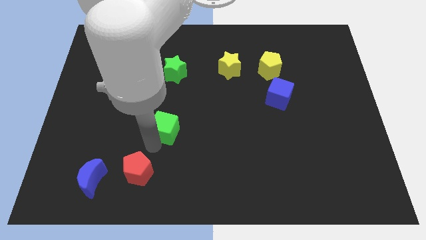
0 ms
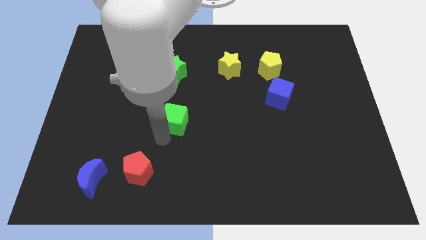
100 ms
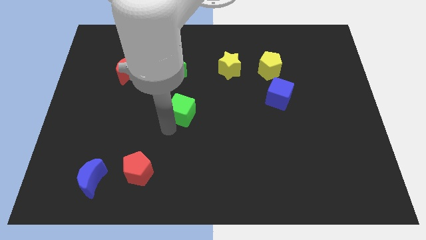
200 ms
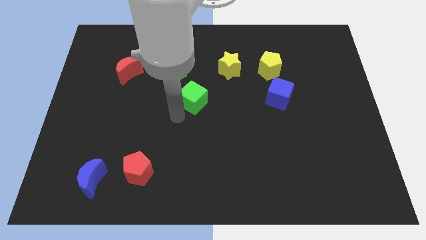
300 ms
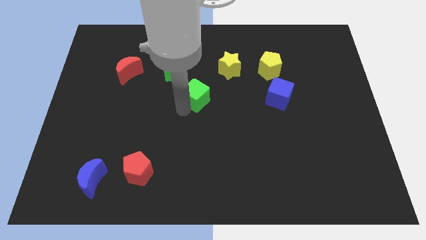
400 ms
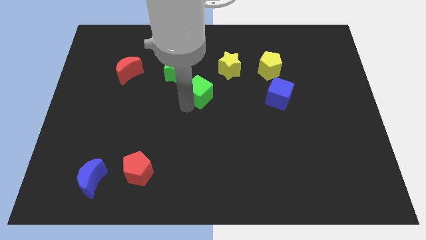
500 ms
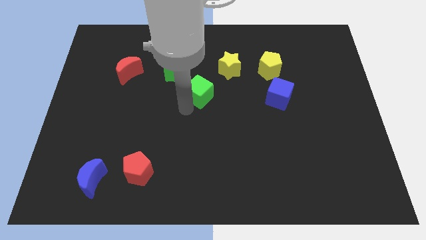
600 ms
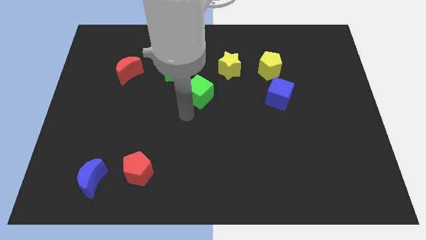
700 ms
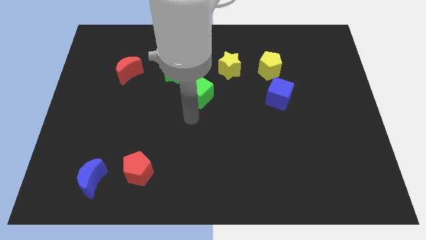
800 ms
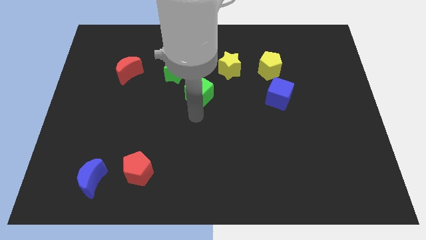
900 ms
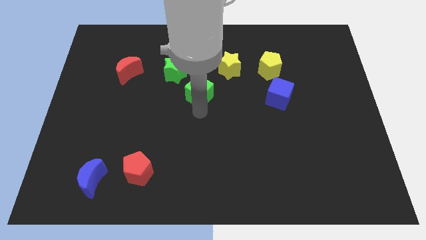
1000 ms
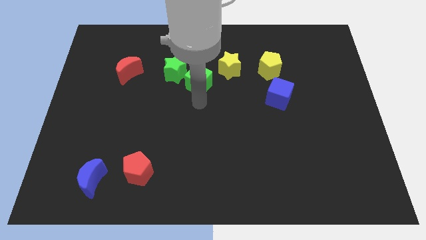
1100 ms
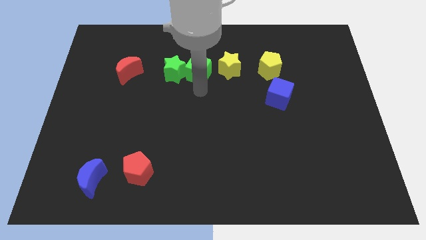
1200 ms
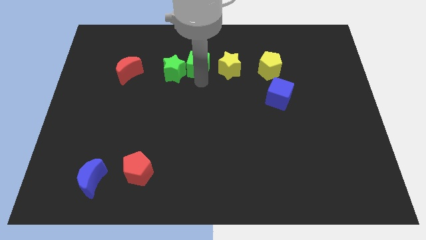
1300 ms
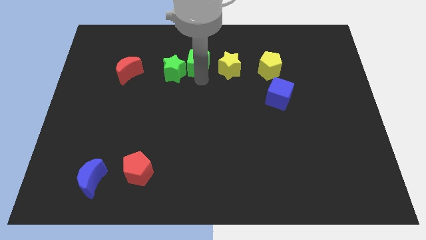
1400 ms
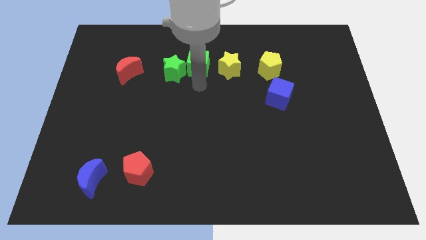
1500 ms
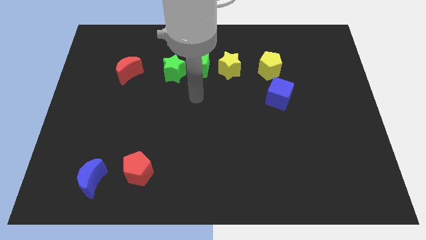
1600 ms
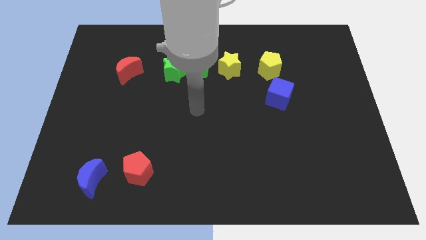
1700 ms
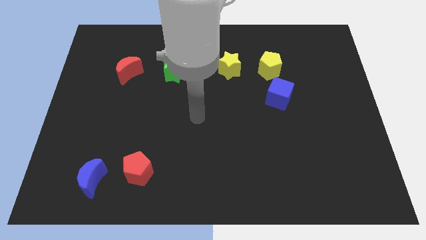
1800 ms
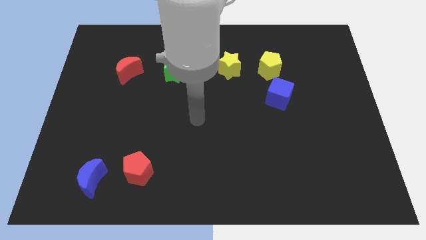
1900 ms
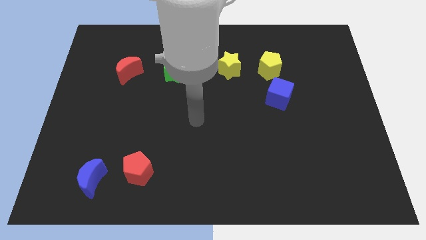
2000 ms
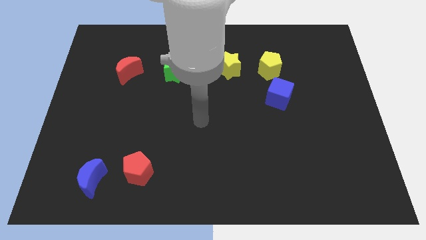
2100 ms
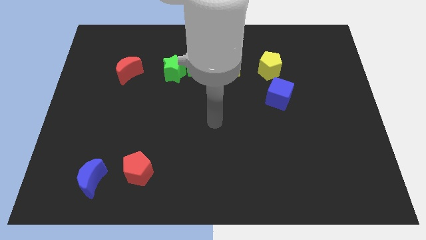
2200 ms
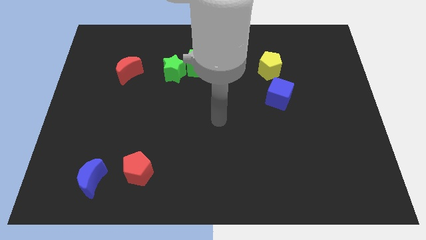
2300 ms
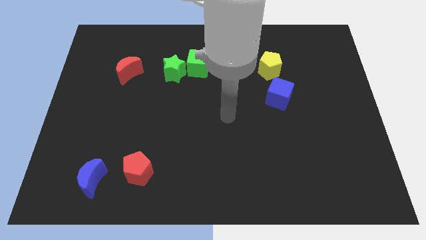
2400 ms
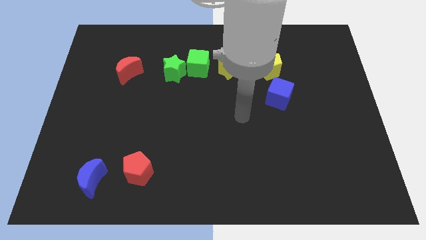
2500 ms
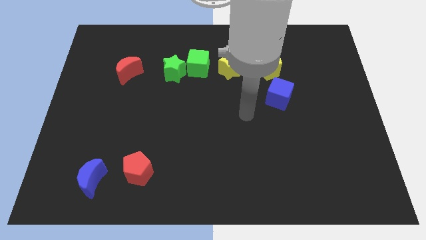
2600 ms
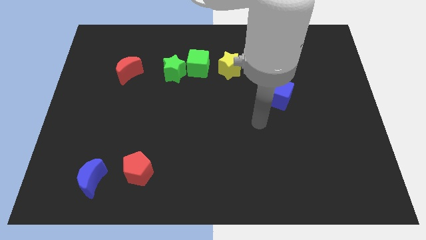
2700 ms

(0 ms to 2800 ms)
place green cube in between green star and yellow star

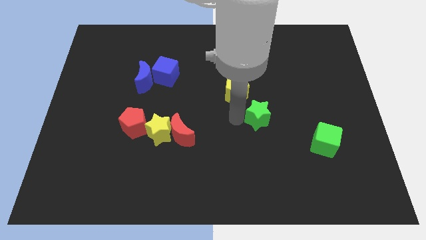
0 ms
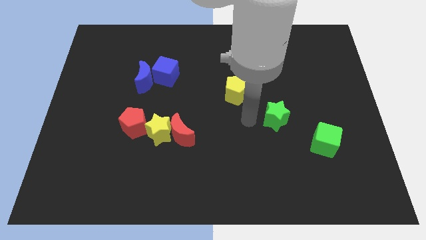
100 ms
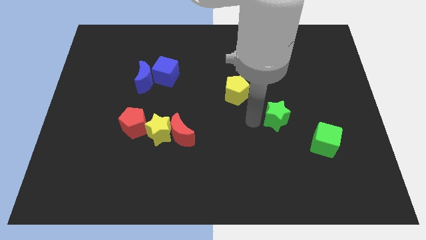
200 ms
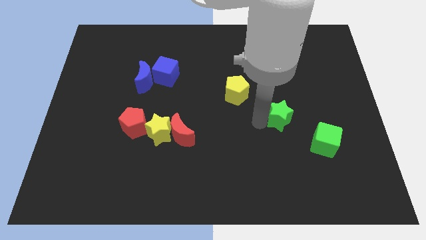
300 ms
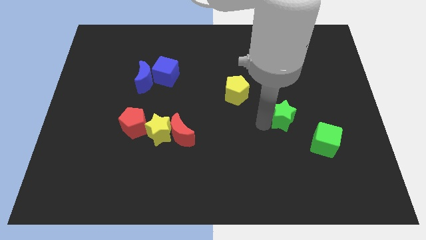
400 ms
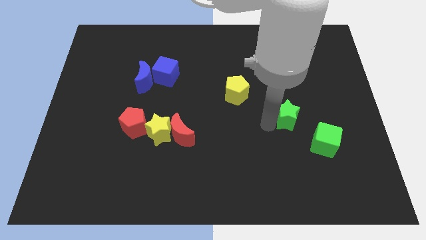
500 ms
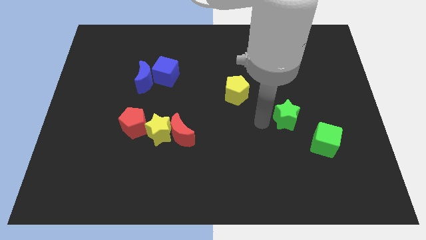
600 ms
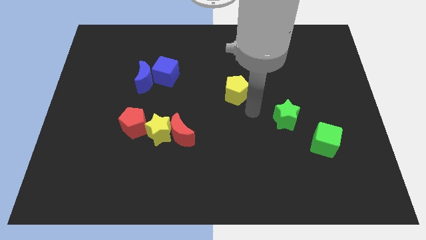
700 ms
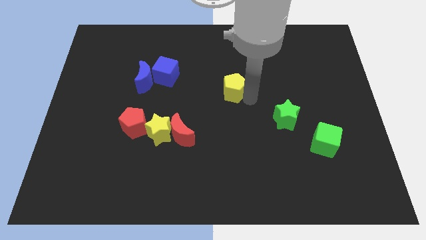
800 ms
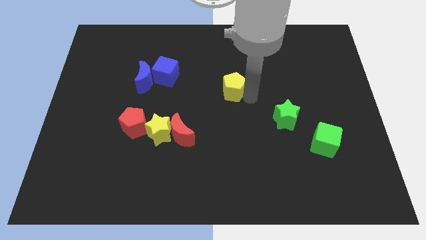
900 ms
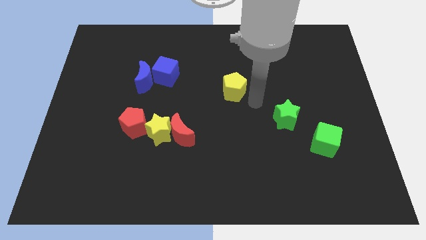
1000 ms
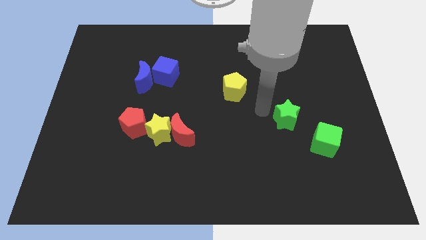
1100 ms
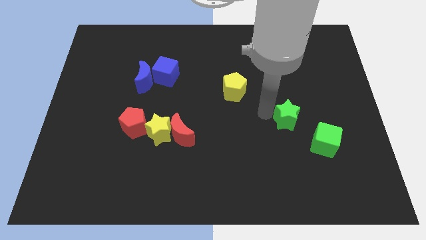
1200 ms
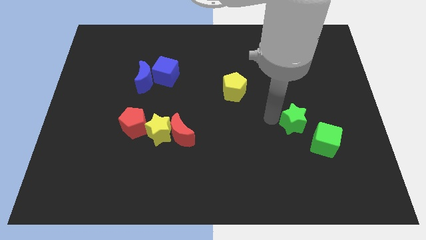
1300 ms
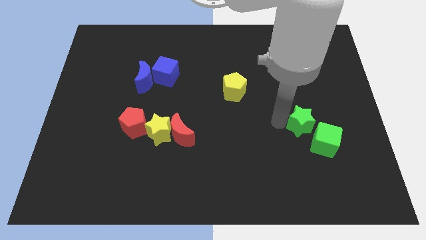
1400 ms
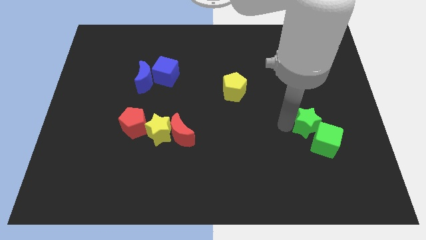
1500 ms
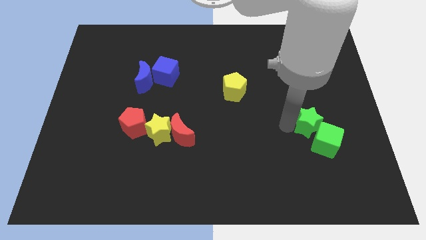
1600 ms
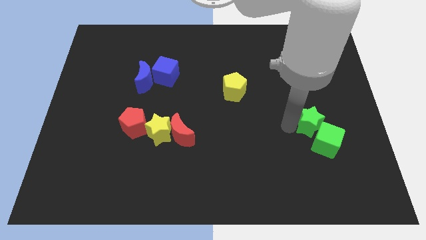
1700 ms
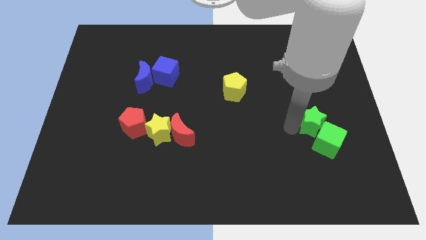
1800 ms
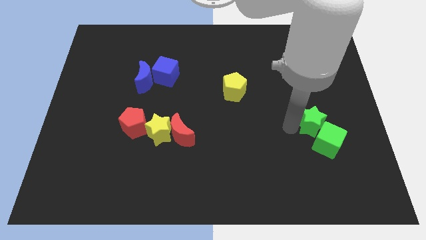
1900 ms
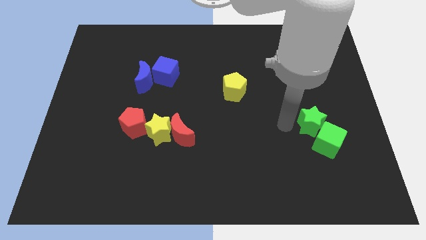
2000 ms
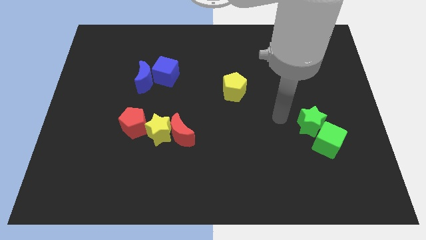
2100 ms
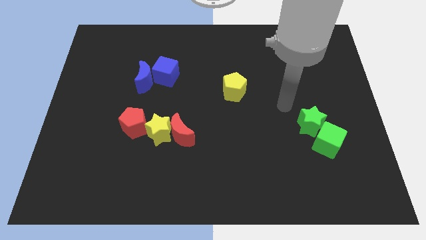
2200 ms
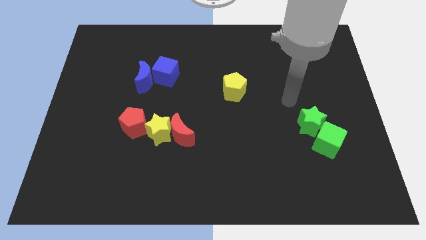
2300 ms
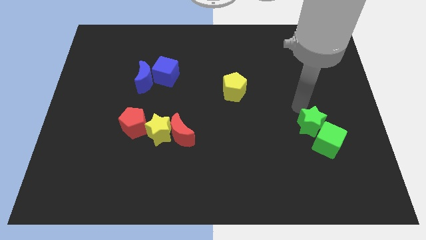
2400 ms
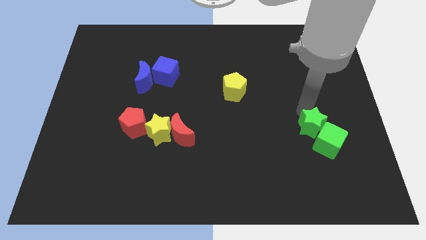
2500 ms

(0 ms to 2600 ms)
move the green star diagonal into the green cube

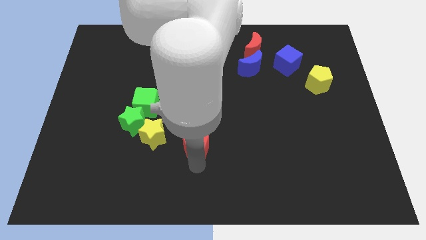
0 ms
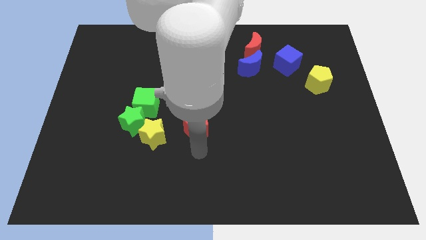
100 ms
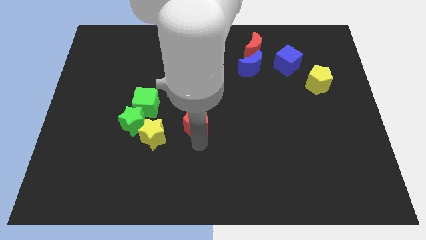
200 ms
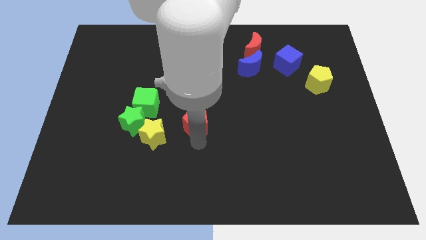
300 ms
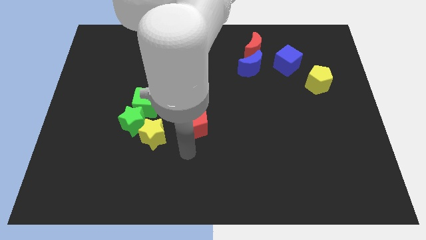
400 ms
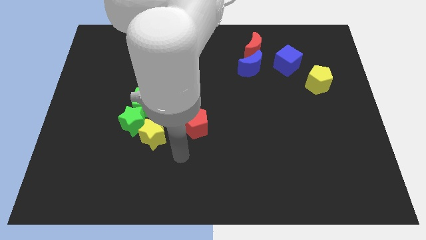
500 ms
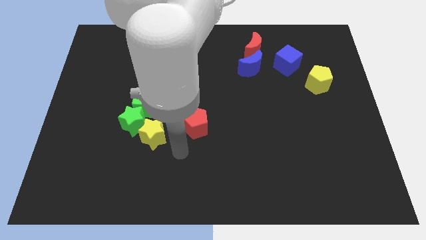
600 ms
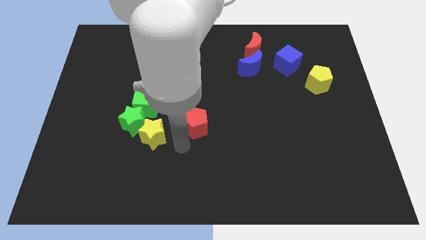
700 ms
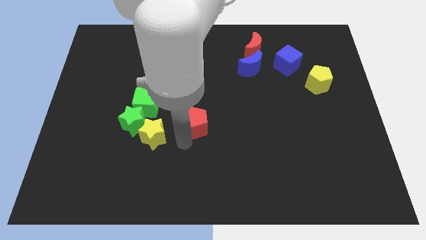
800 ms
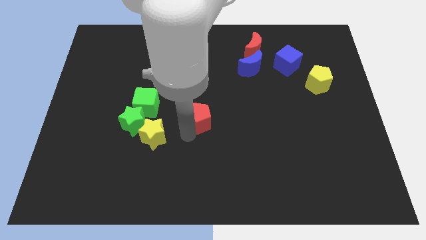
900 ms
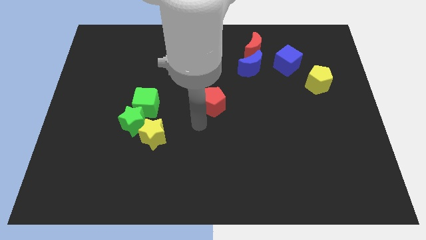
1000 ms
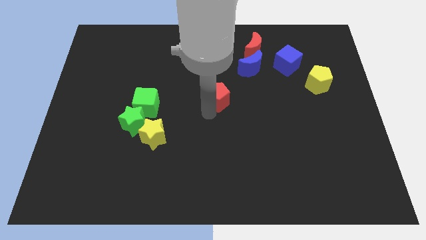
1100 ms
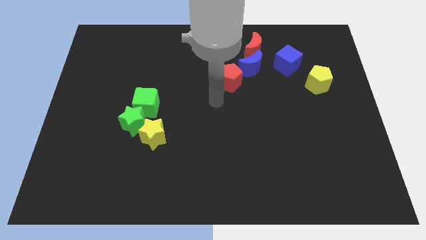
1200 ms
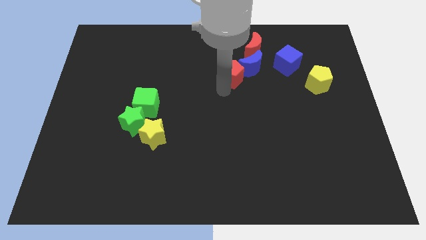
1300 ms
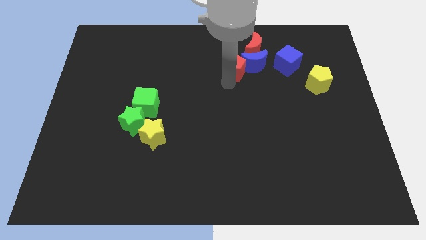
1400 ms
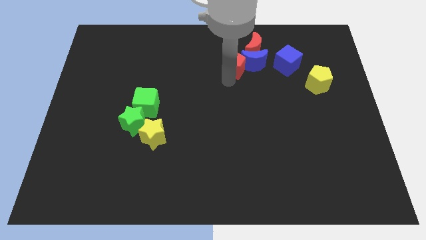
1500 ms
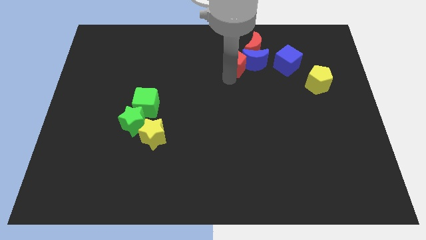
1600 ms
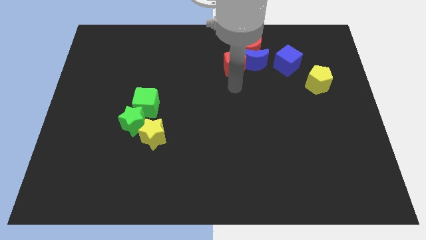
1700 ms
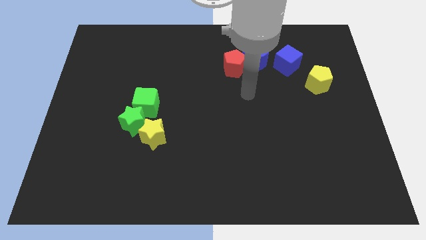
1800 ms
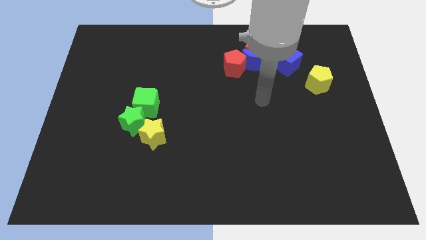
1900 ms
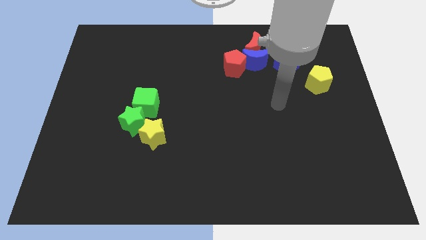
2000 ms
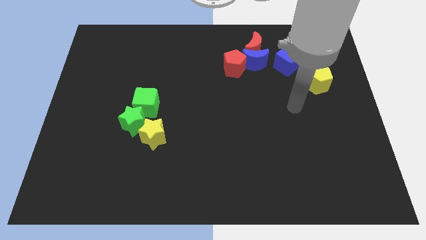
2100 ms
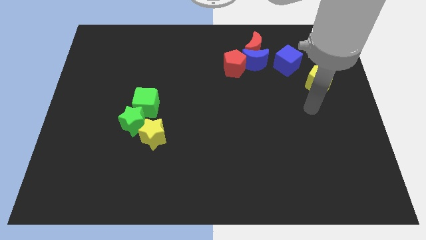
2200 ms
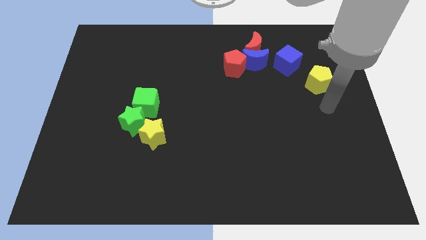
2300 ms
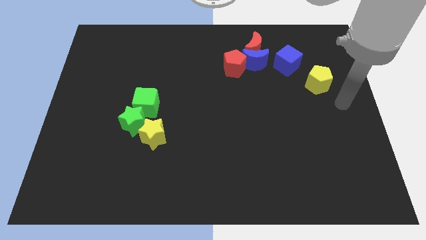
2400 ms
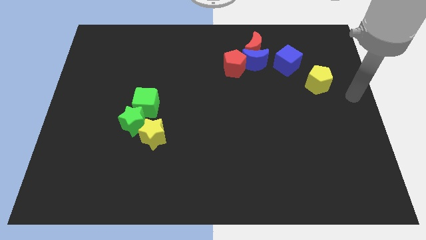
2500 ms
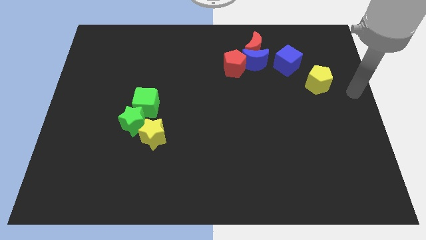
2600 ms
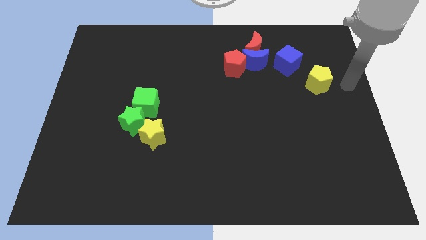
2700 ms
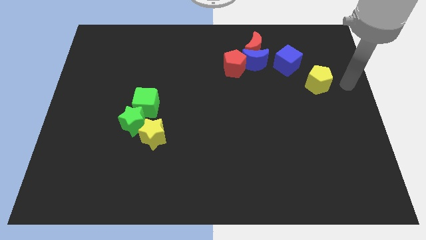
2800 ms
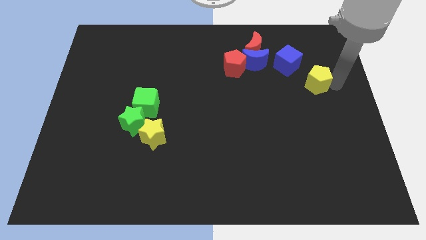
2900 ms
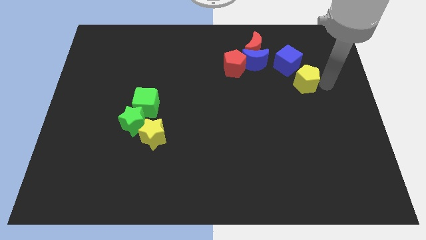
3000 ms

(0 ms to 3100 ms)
push the red pentagon into the blue moon

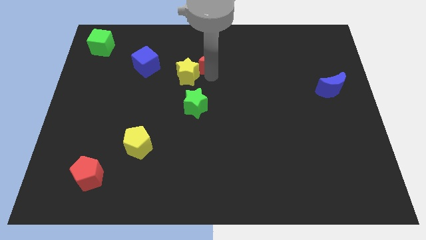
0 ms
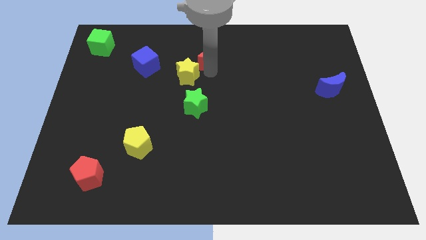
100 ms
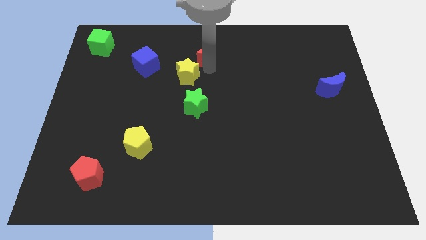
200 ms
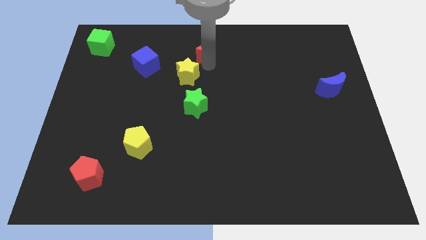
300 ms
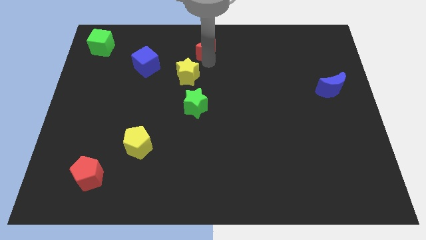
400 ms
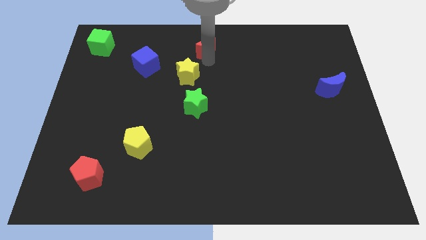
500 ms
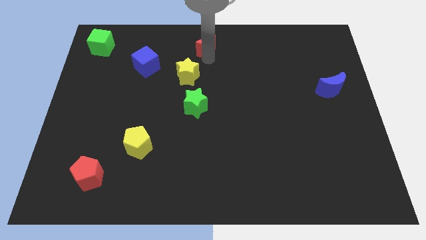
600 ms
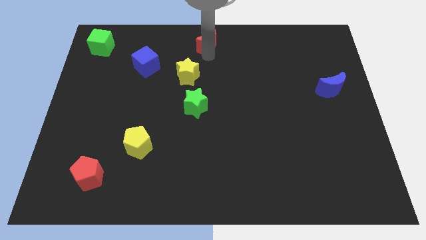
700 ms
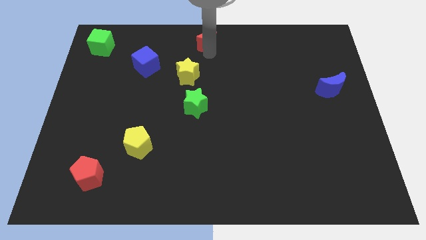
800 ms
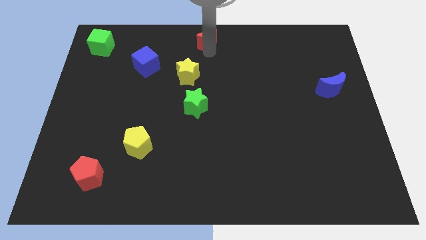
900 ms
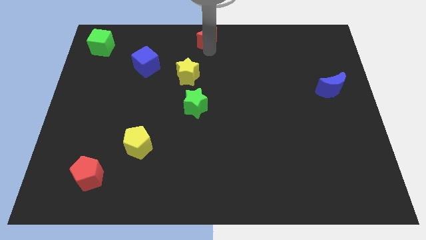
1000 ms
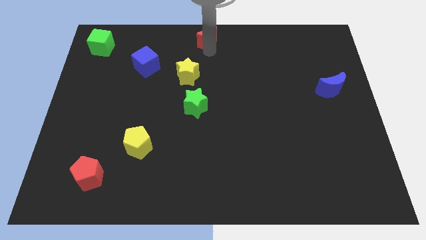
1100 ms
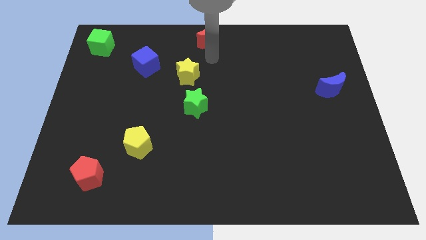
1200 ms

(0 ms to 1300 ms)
place the red crescent at the top center of the board
